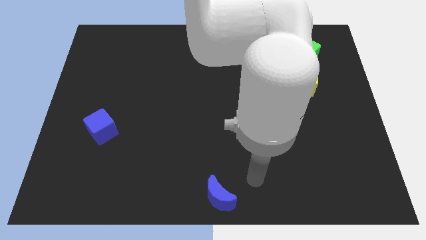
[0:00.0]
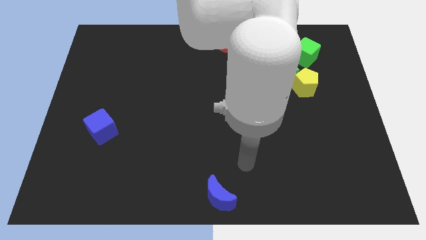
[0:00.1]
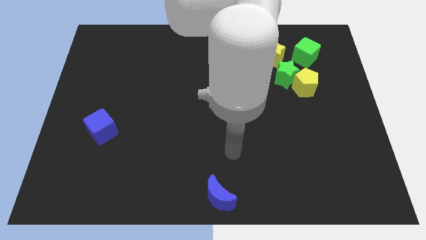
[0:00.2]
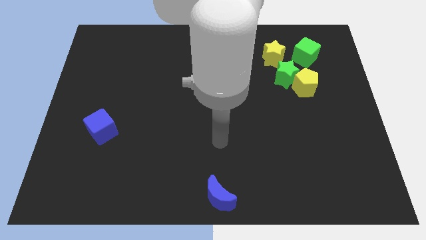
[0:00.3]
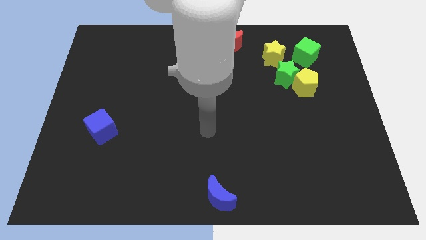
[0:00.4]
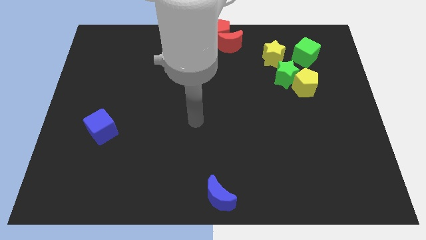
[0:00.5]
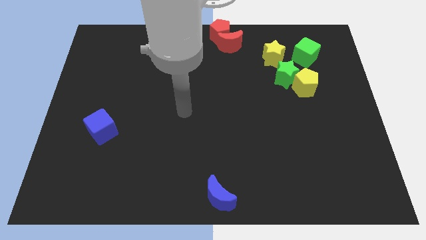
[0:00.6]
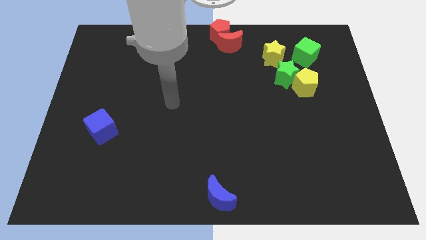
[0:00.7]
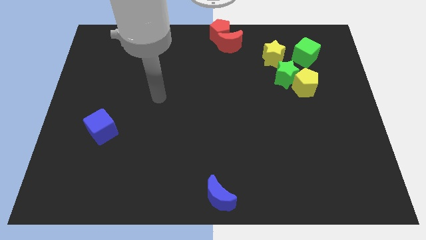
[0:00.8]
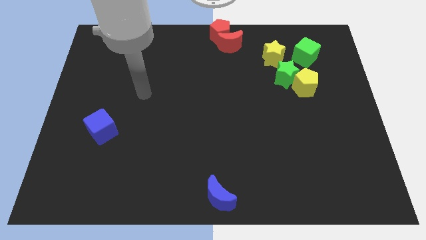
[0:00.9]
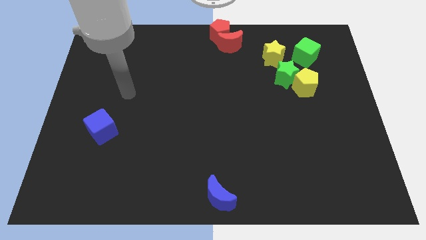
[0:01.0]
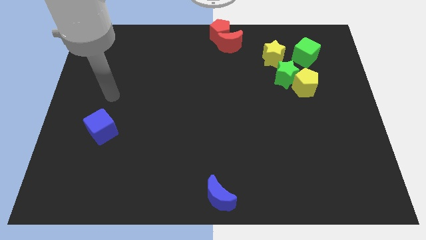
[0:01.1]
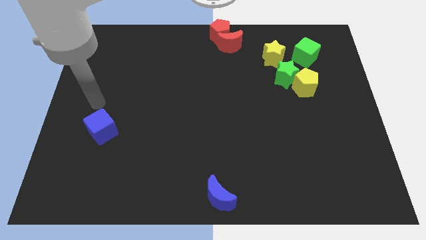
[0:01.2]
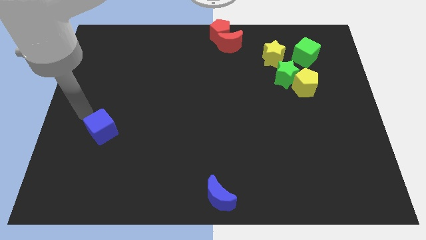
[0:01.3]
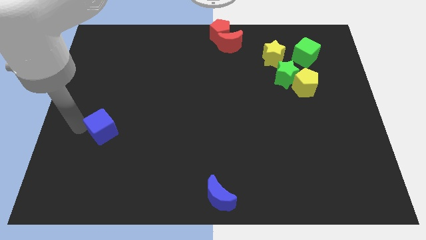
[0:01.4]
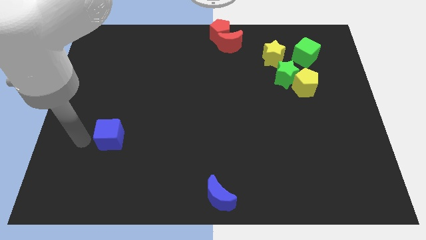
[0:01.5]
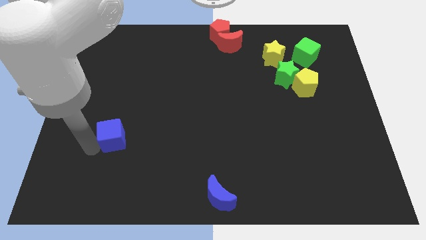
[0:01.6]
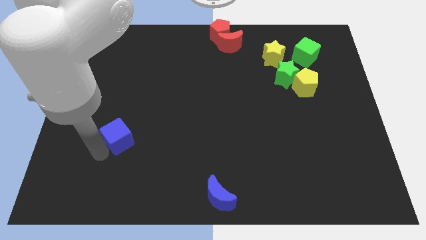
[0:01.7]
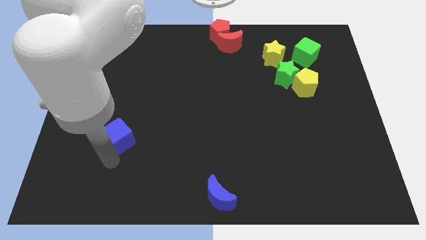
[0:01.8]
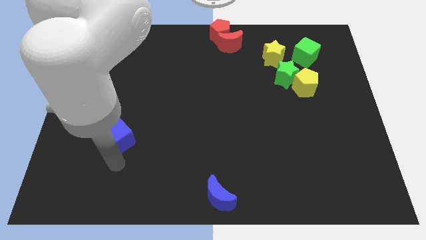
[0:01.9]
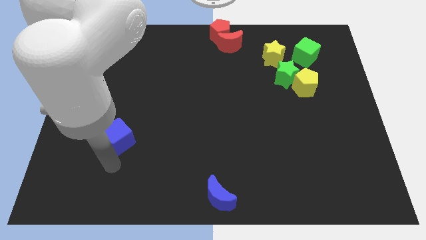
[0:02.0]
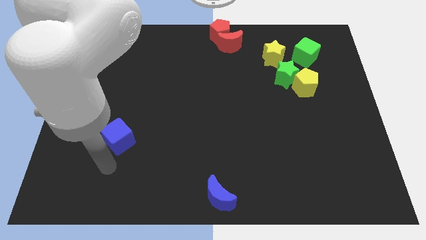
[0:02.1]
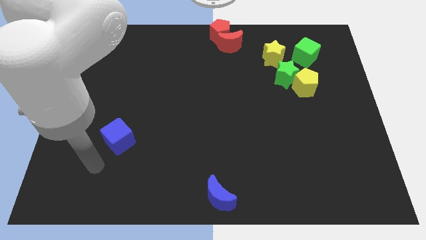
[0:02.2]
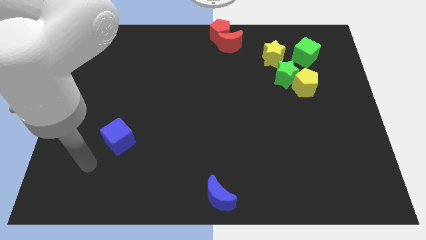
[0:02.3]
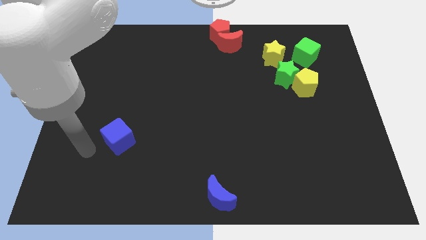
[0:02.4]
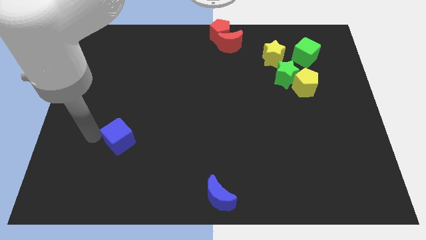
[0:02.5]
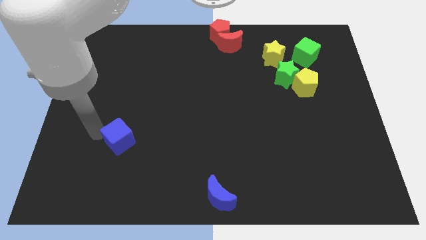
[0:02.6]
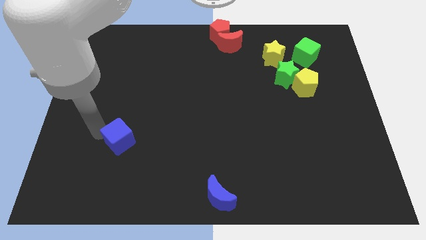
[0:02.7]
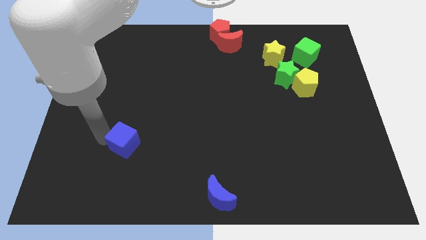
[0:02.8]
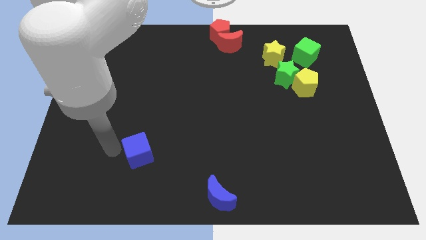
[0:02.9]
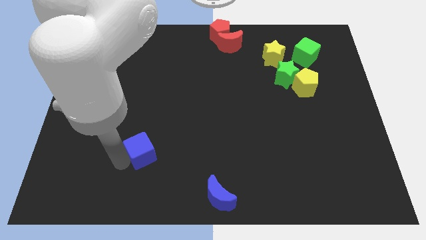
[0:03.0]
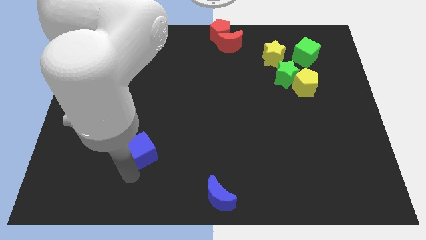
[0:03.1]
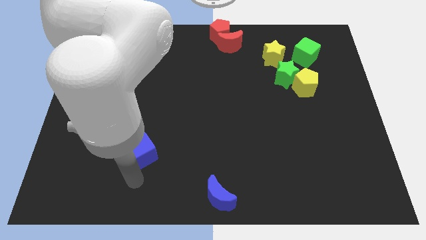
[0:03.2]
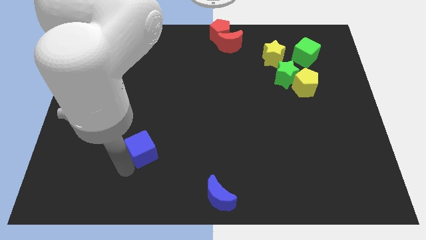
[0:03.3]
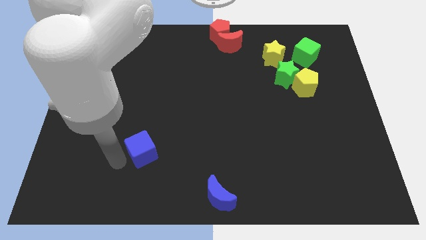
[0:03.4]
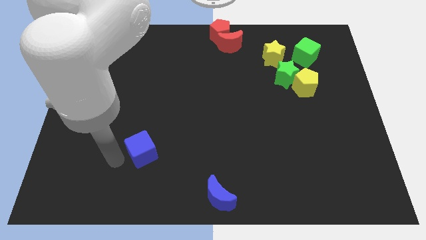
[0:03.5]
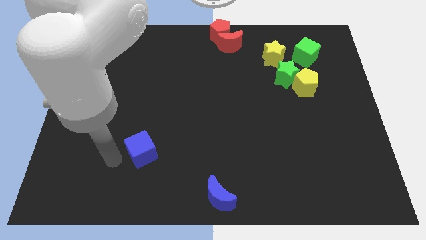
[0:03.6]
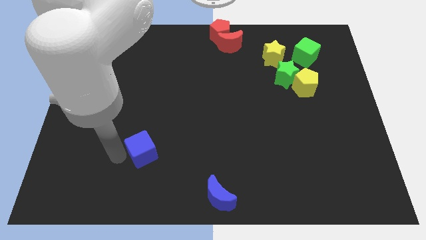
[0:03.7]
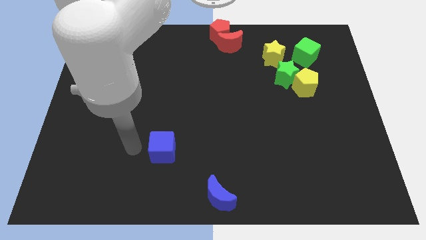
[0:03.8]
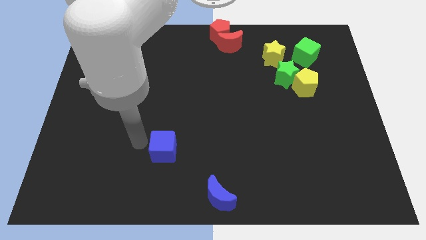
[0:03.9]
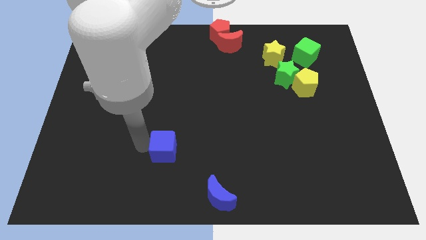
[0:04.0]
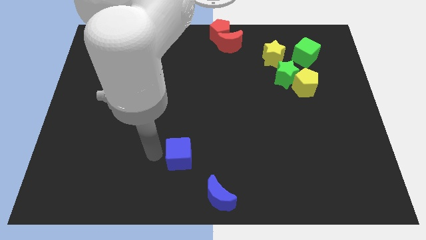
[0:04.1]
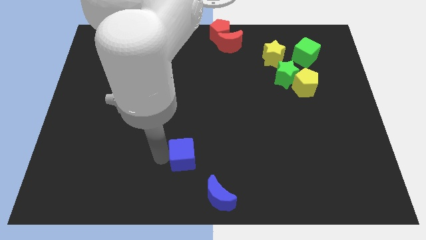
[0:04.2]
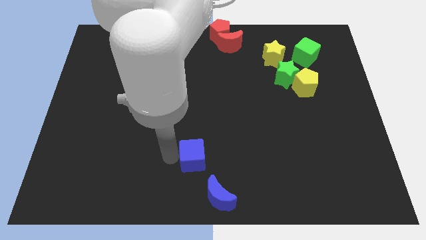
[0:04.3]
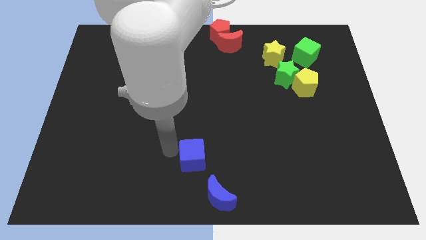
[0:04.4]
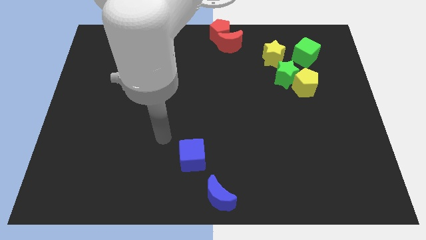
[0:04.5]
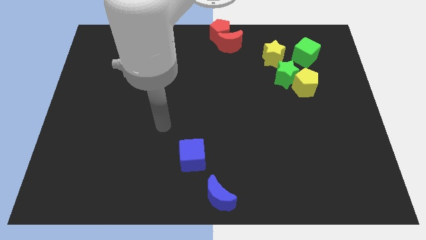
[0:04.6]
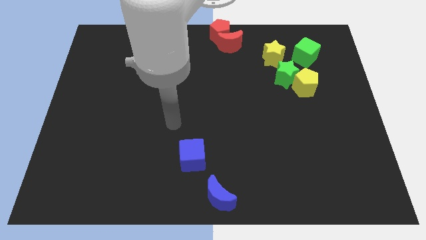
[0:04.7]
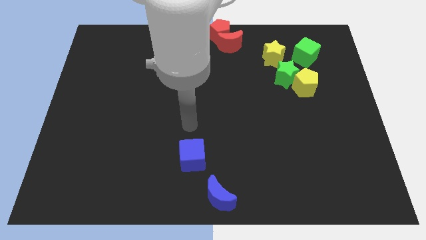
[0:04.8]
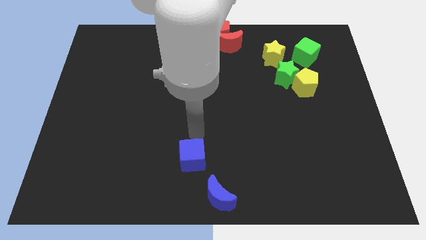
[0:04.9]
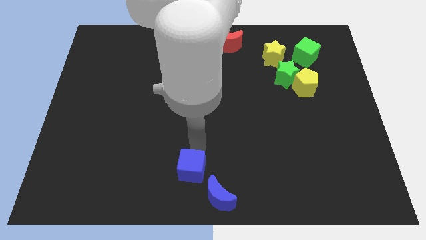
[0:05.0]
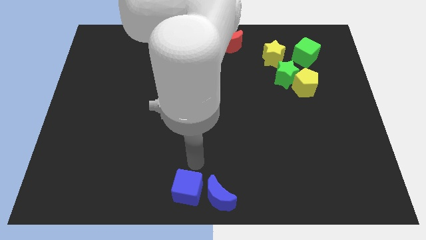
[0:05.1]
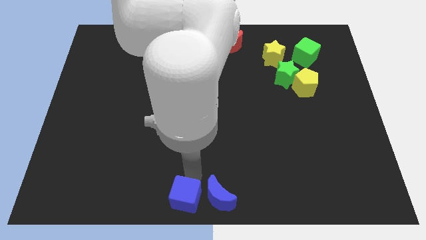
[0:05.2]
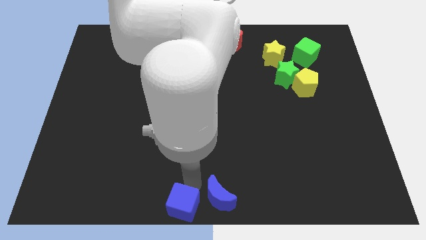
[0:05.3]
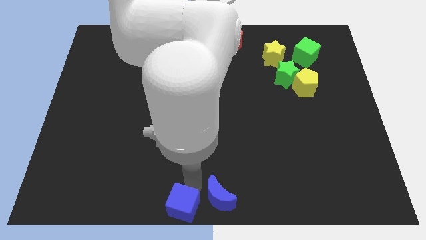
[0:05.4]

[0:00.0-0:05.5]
drag the blue cube to the left side of the blue crescent

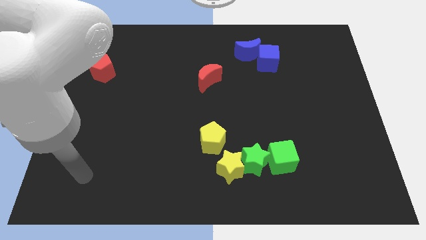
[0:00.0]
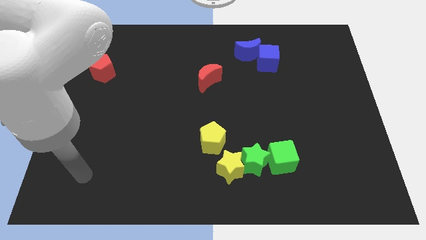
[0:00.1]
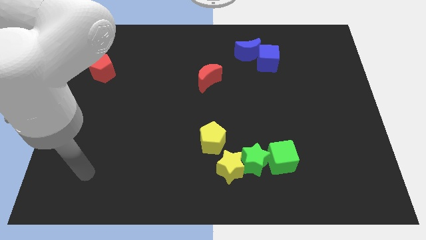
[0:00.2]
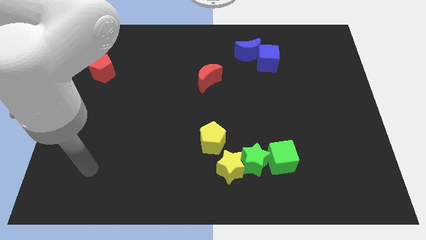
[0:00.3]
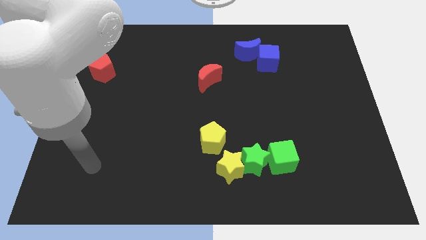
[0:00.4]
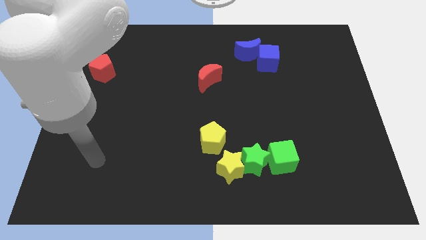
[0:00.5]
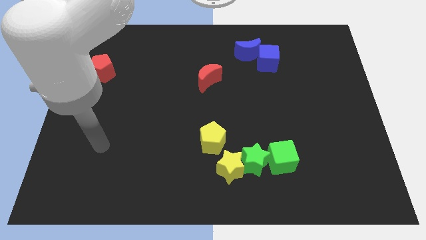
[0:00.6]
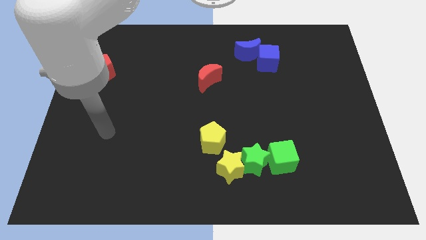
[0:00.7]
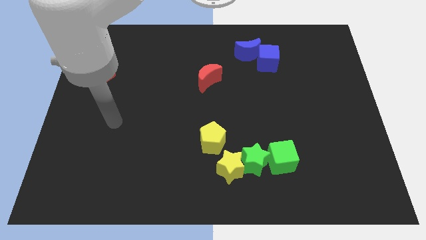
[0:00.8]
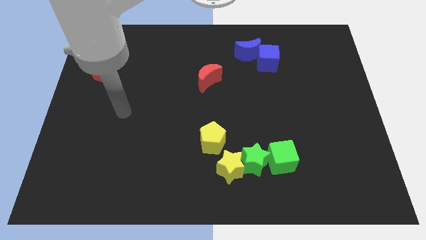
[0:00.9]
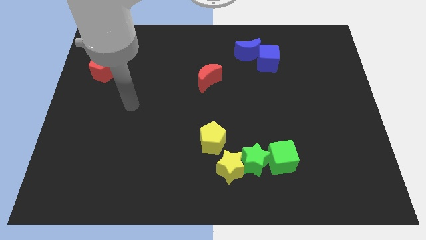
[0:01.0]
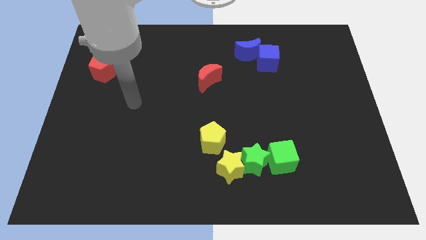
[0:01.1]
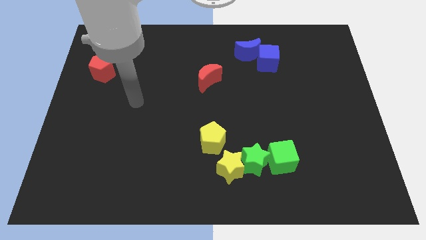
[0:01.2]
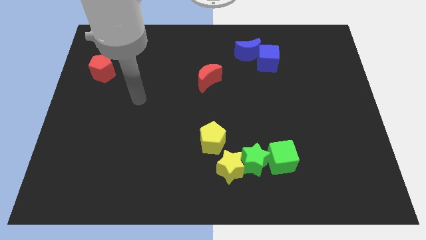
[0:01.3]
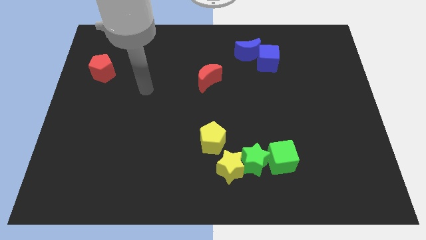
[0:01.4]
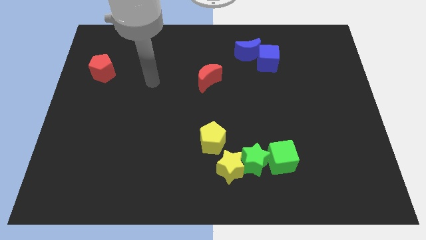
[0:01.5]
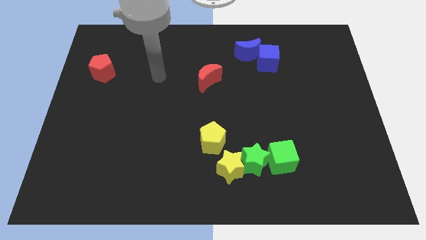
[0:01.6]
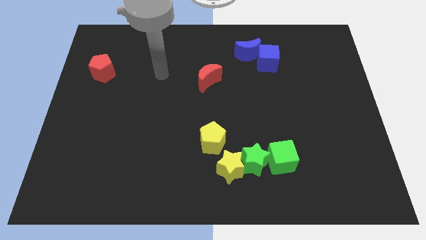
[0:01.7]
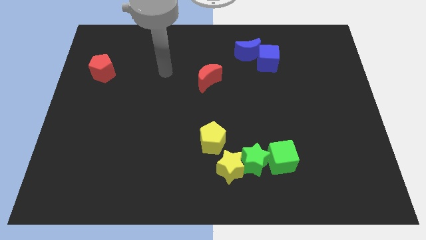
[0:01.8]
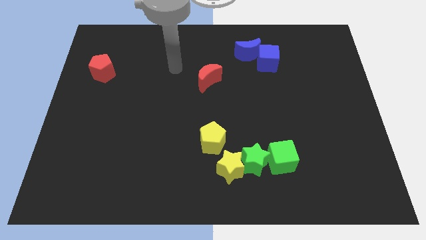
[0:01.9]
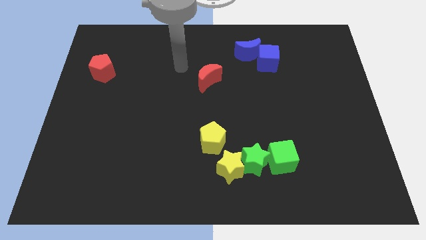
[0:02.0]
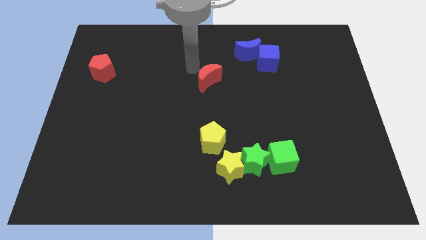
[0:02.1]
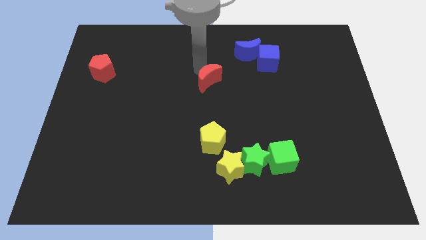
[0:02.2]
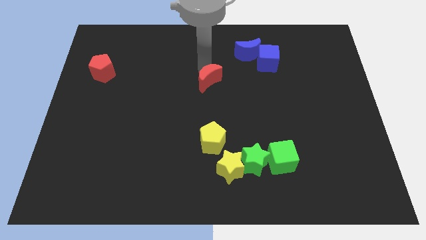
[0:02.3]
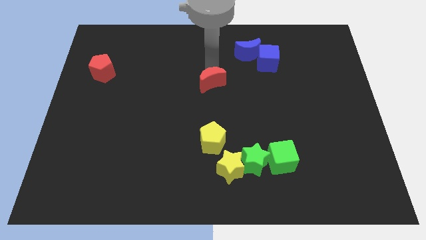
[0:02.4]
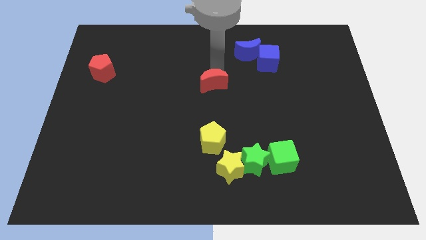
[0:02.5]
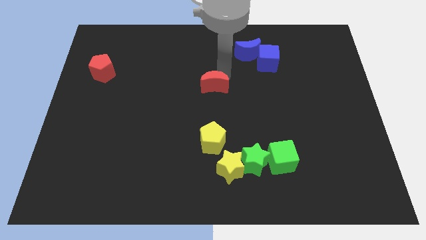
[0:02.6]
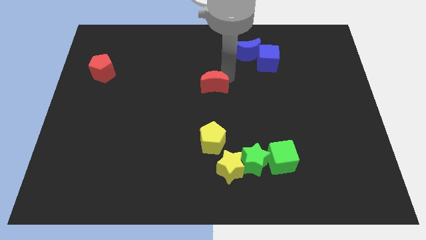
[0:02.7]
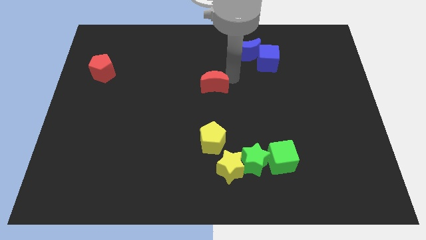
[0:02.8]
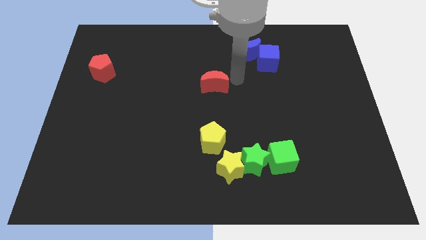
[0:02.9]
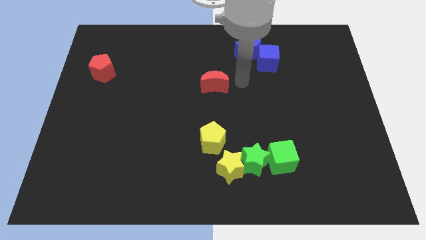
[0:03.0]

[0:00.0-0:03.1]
adjust the red crescent at the top side of the yellow pentagon

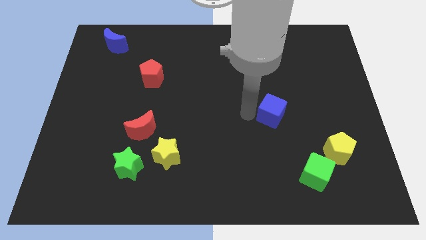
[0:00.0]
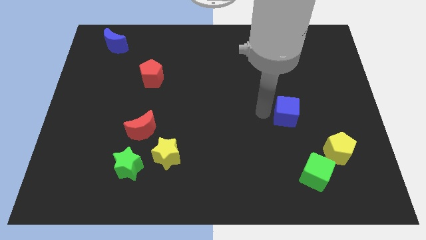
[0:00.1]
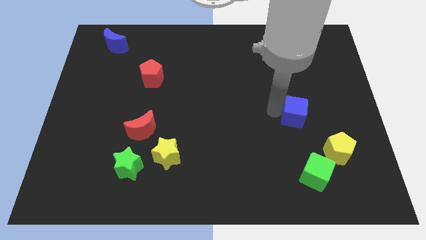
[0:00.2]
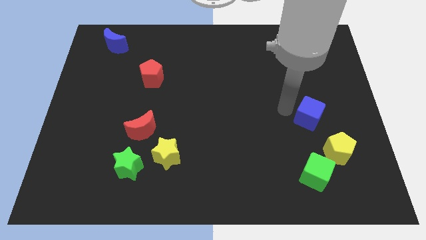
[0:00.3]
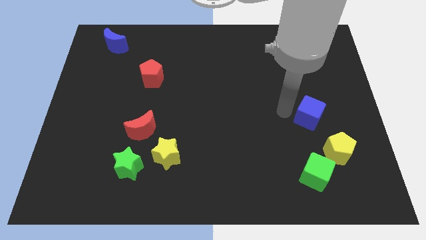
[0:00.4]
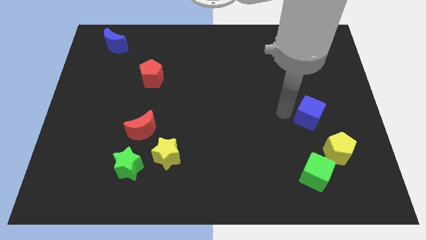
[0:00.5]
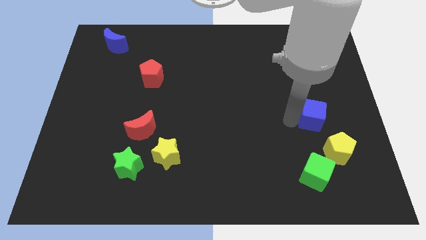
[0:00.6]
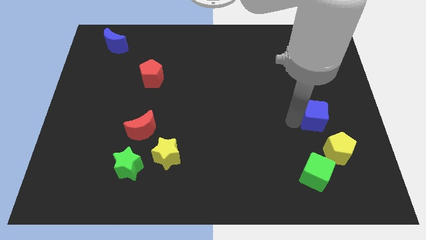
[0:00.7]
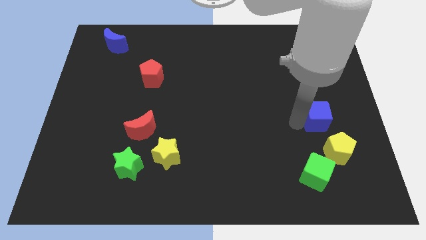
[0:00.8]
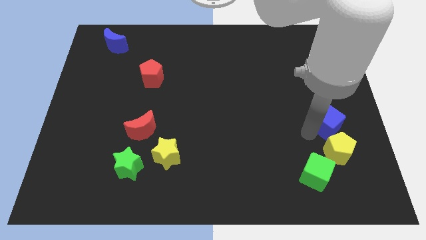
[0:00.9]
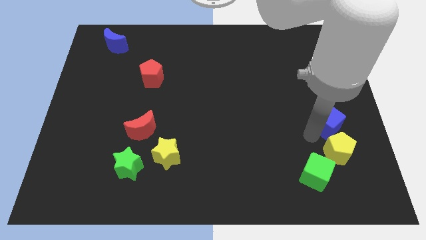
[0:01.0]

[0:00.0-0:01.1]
place the blue cube to the top of the yellow pentagon
